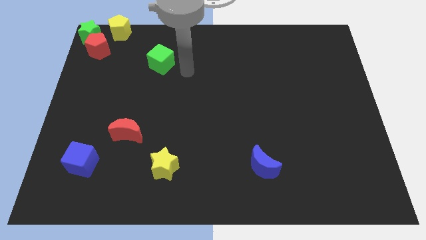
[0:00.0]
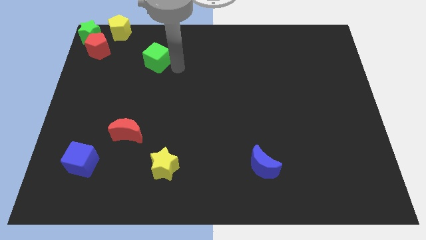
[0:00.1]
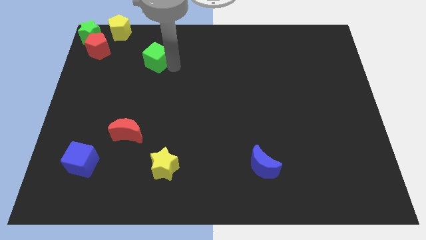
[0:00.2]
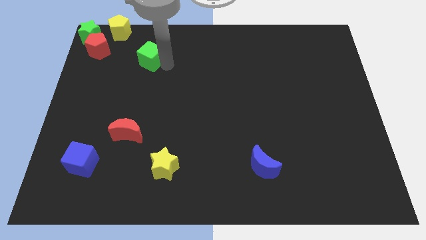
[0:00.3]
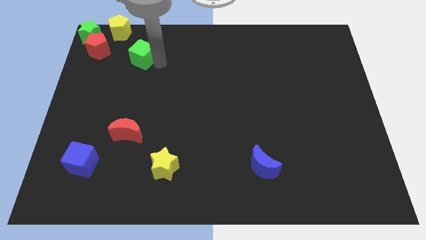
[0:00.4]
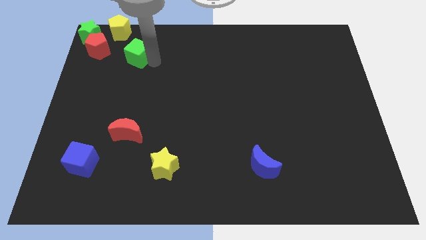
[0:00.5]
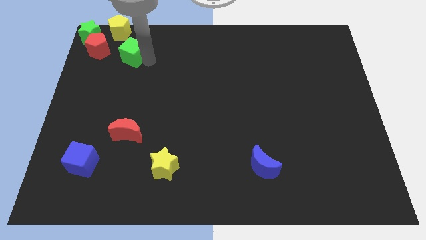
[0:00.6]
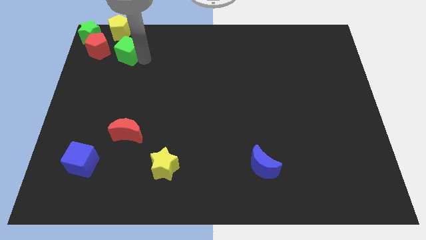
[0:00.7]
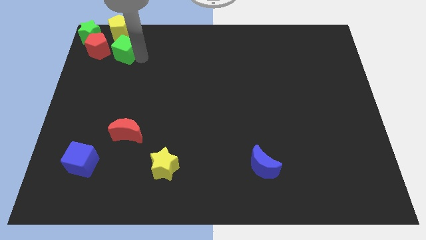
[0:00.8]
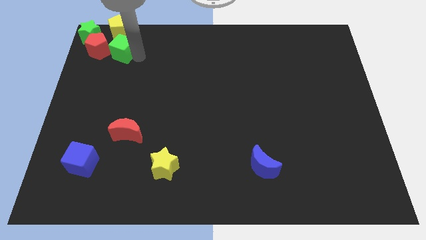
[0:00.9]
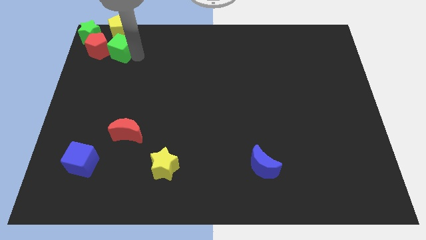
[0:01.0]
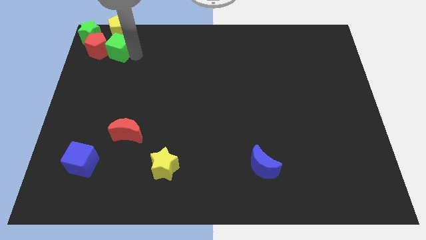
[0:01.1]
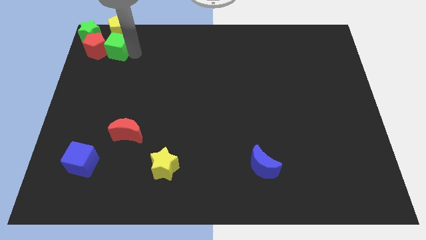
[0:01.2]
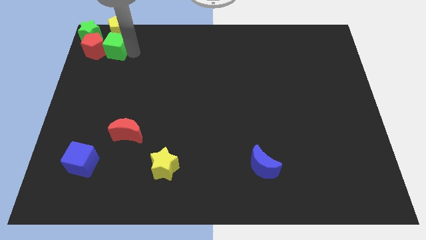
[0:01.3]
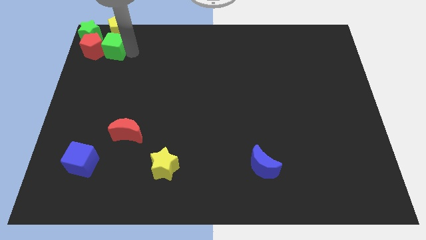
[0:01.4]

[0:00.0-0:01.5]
place the green cube below yellow pentagon

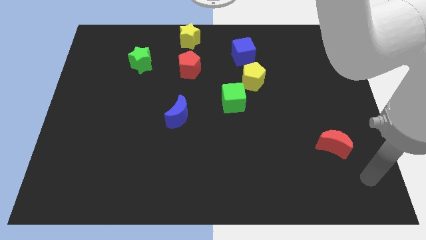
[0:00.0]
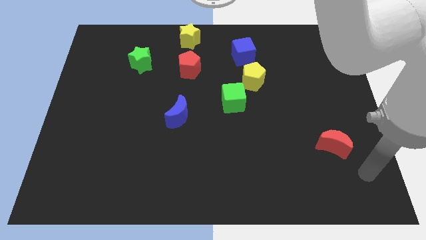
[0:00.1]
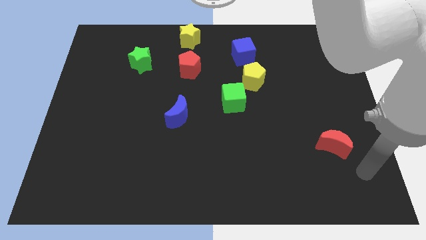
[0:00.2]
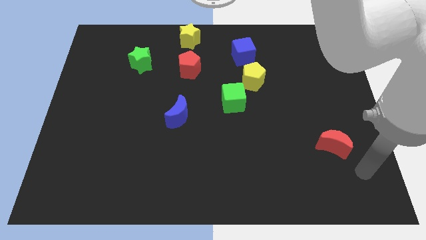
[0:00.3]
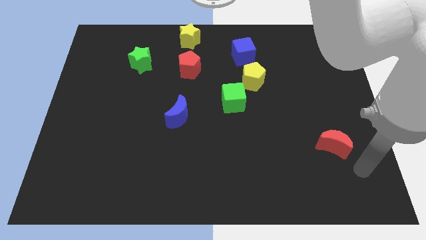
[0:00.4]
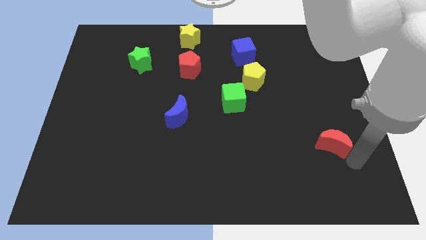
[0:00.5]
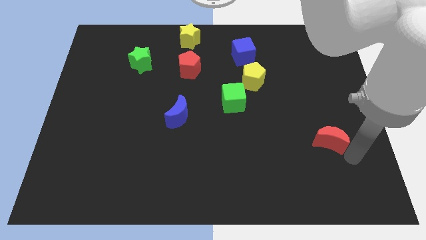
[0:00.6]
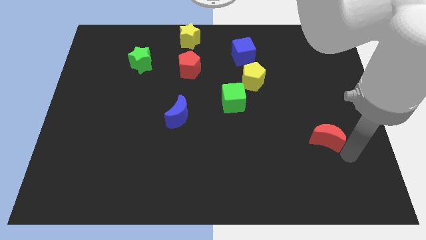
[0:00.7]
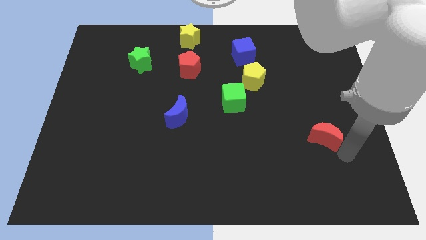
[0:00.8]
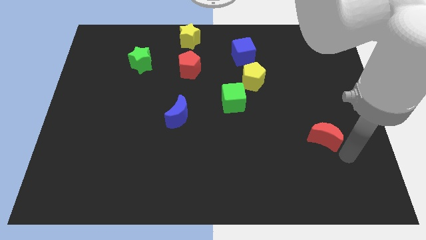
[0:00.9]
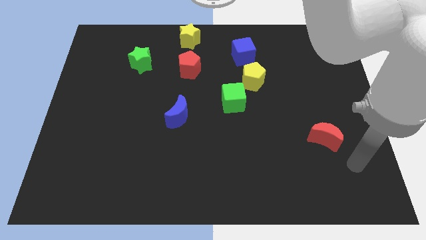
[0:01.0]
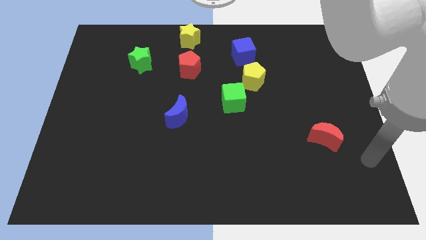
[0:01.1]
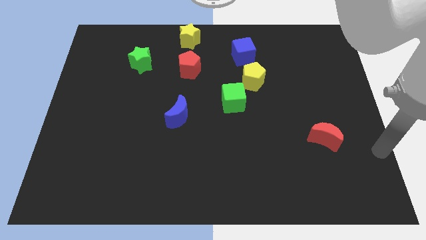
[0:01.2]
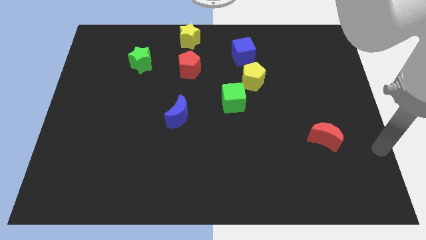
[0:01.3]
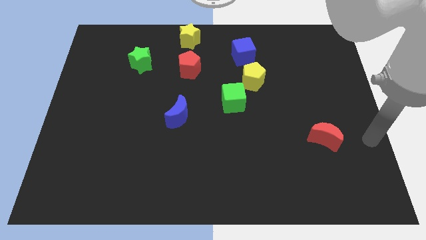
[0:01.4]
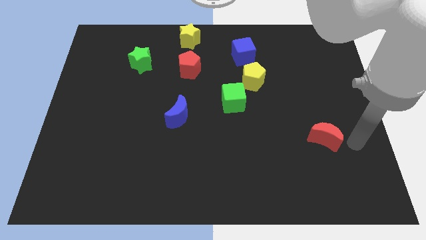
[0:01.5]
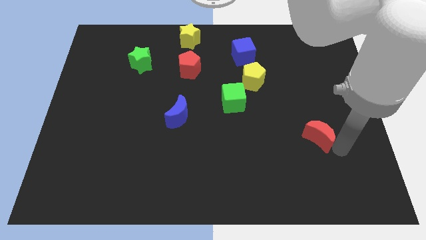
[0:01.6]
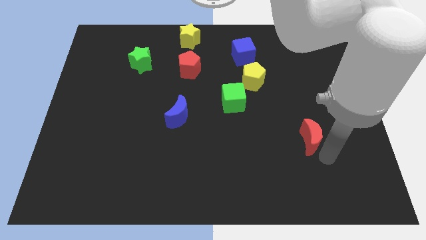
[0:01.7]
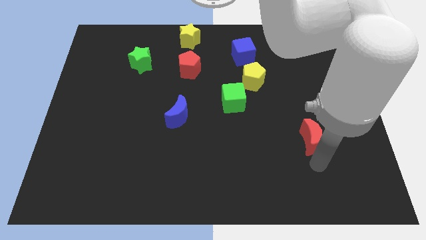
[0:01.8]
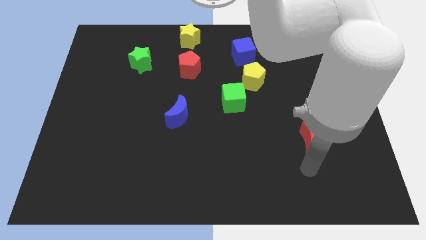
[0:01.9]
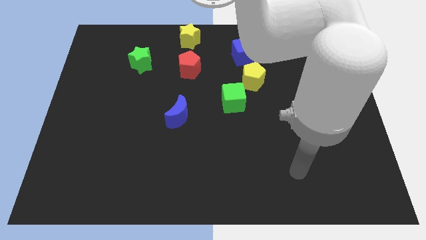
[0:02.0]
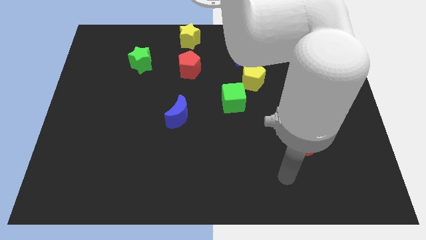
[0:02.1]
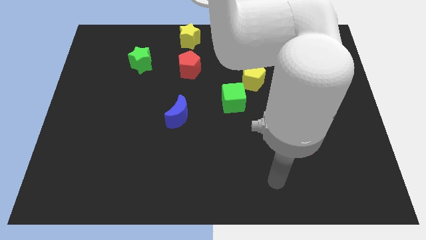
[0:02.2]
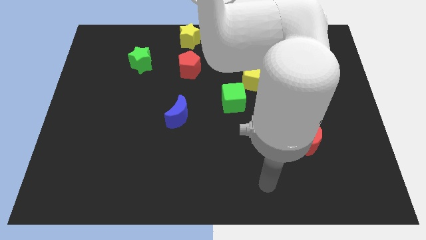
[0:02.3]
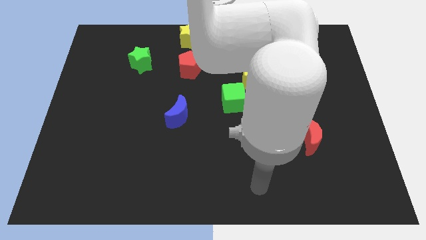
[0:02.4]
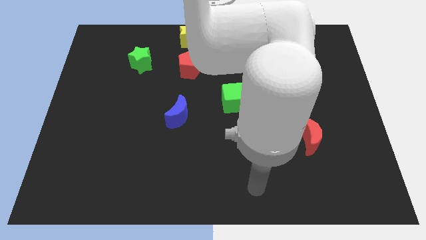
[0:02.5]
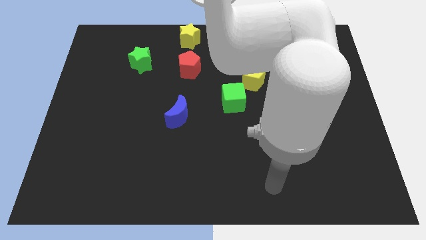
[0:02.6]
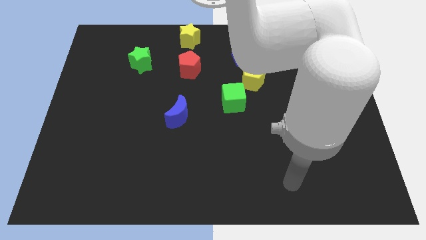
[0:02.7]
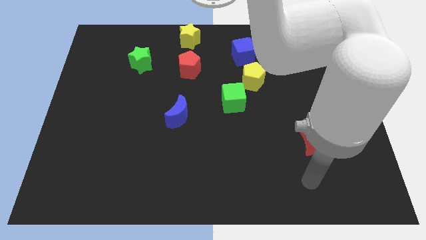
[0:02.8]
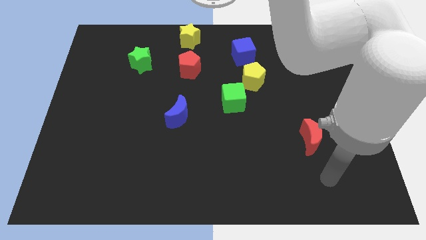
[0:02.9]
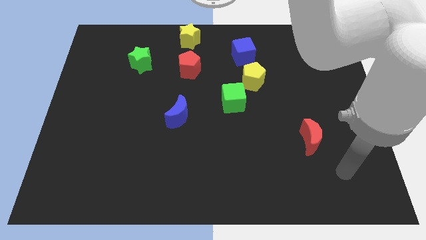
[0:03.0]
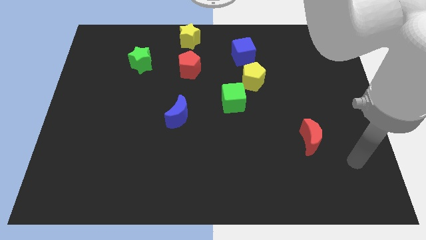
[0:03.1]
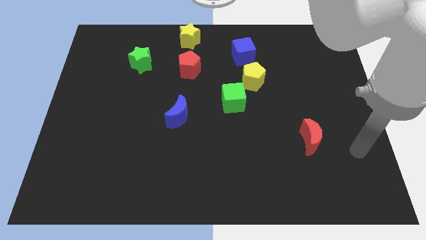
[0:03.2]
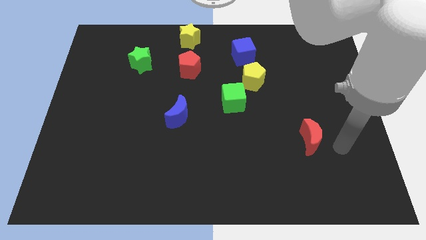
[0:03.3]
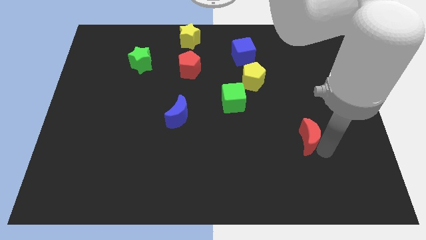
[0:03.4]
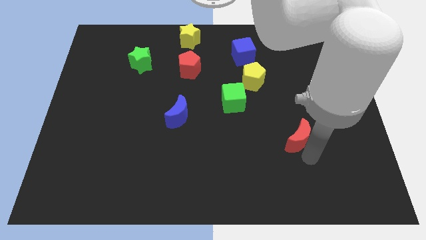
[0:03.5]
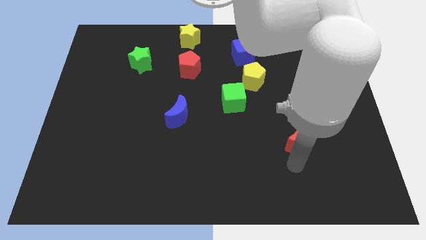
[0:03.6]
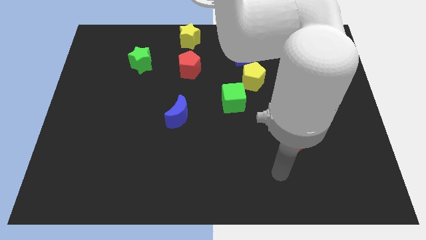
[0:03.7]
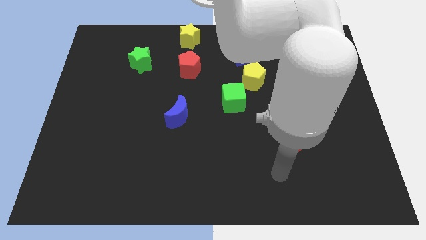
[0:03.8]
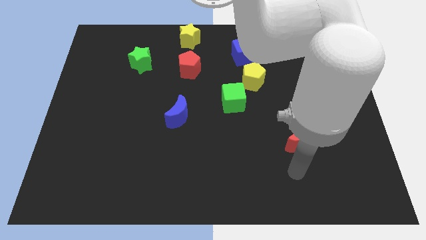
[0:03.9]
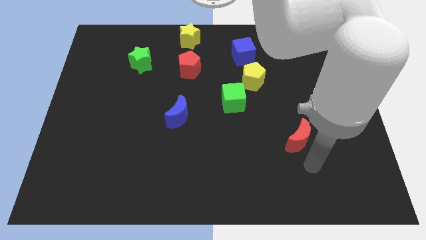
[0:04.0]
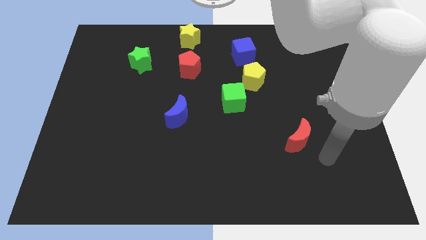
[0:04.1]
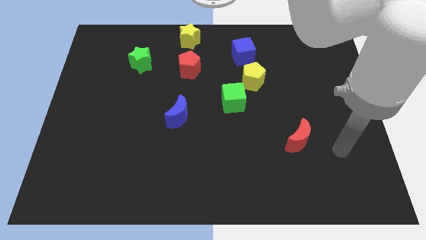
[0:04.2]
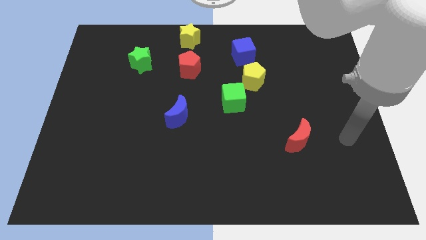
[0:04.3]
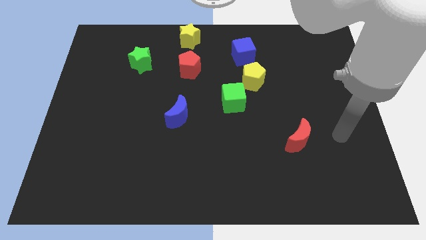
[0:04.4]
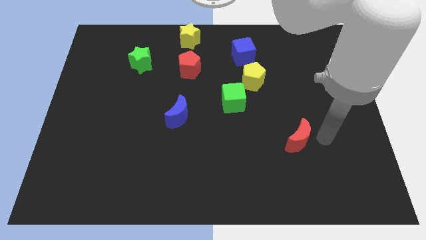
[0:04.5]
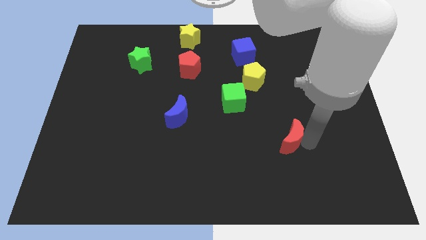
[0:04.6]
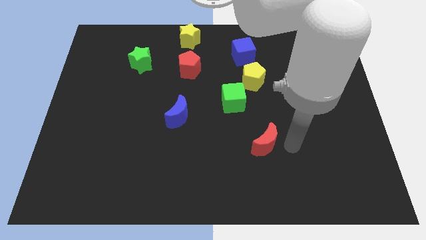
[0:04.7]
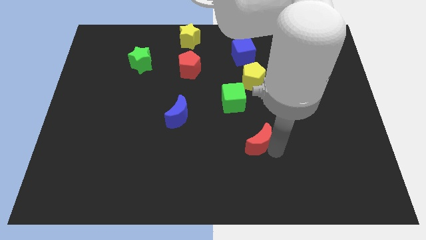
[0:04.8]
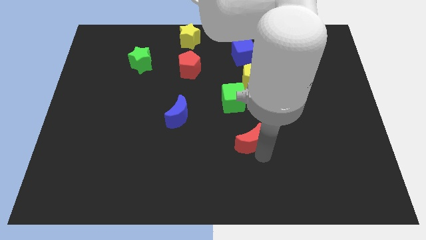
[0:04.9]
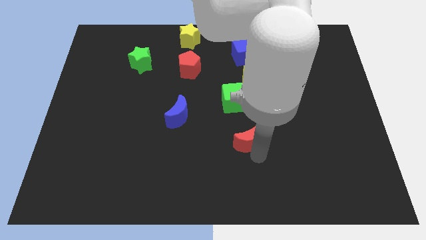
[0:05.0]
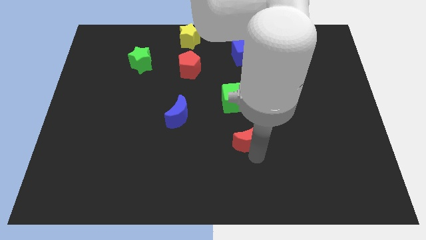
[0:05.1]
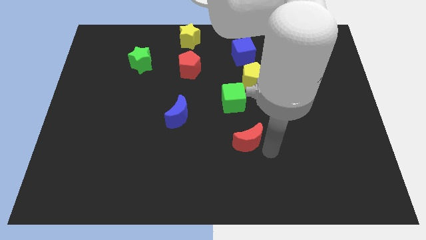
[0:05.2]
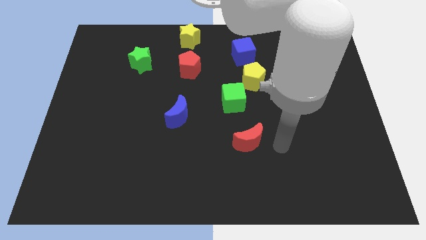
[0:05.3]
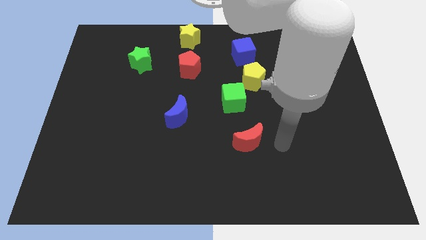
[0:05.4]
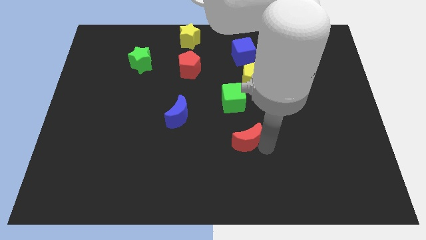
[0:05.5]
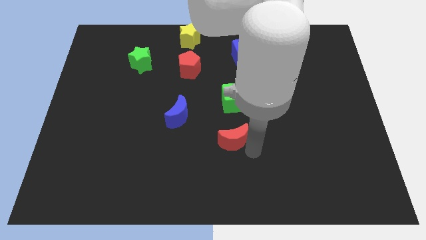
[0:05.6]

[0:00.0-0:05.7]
place the red crescent below the green cube

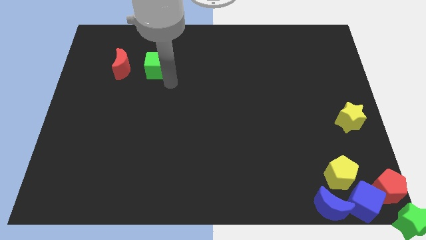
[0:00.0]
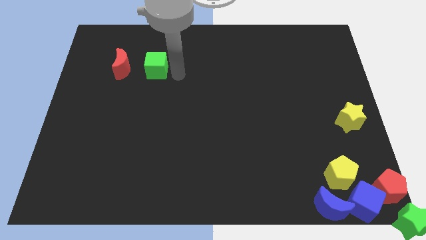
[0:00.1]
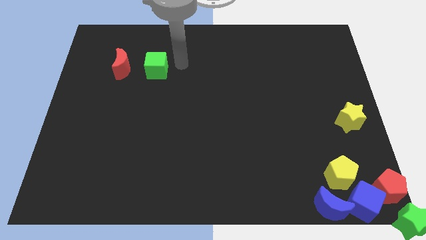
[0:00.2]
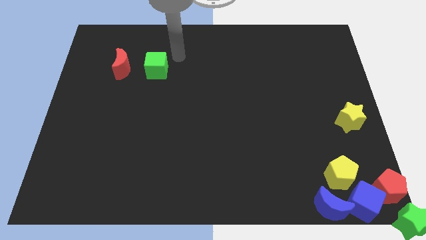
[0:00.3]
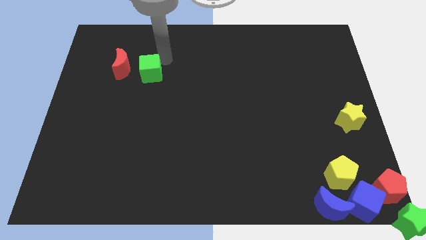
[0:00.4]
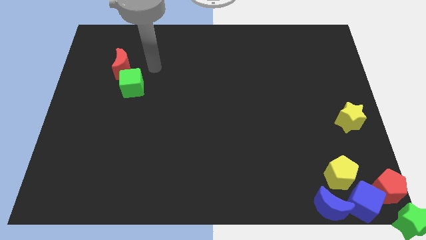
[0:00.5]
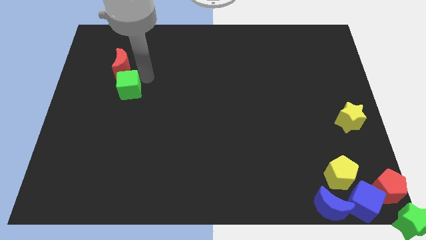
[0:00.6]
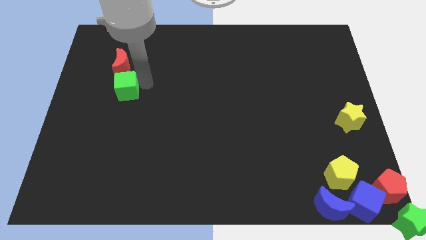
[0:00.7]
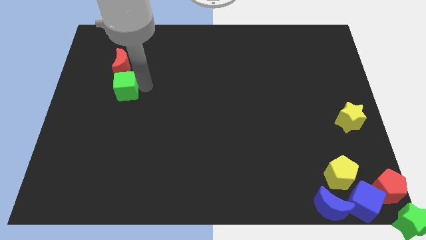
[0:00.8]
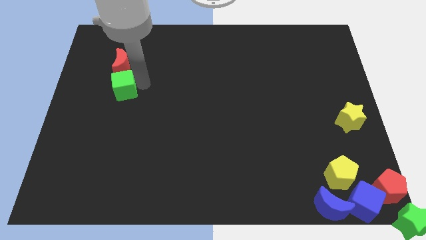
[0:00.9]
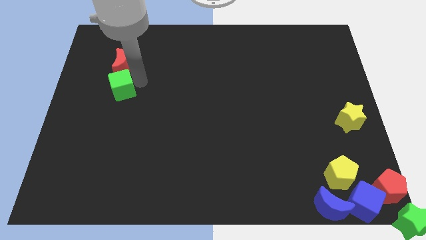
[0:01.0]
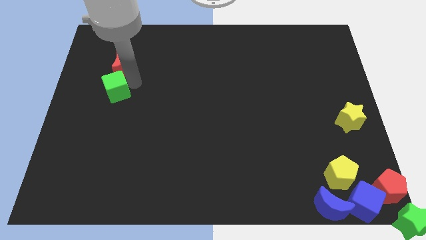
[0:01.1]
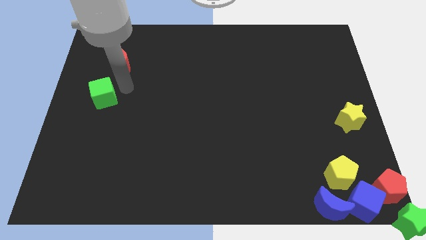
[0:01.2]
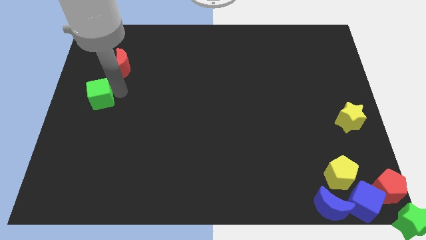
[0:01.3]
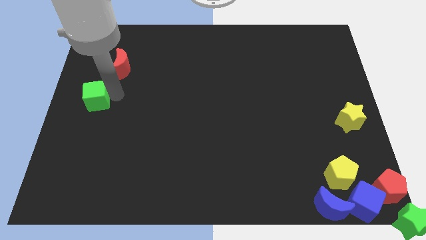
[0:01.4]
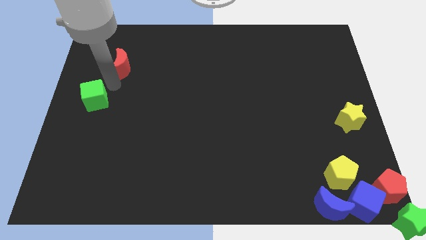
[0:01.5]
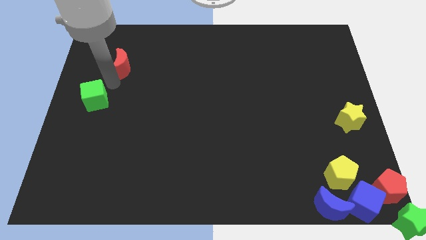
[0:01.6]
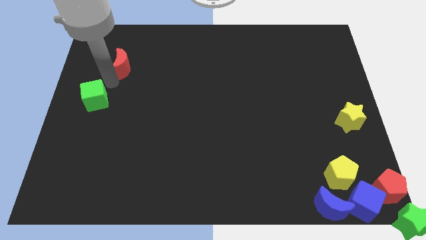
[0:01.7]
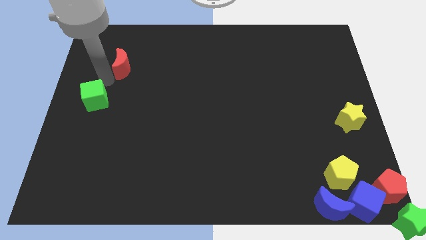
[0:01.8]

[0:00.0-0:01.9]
move the green cube towards the center left

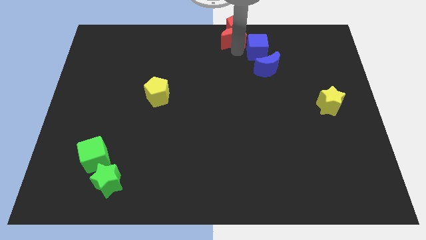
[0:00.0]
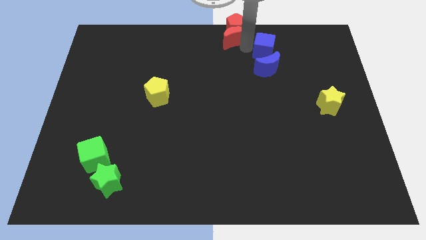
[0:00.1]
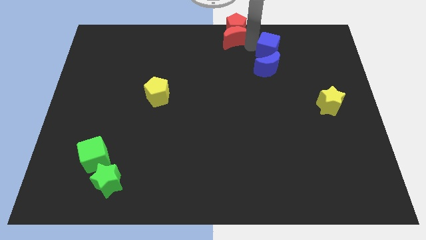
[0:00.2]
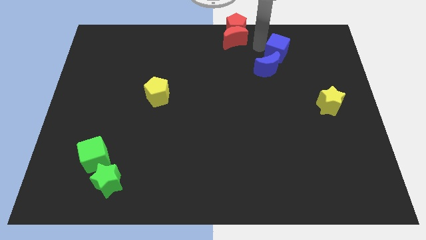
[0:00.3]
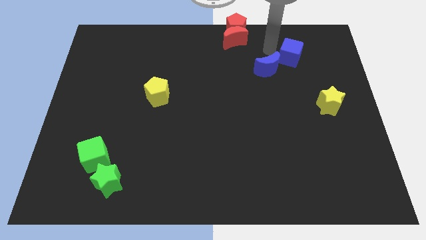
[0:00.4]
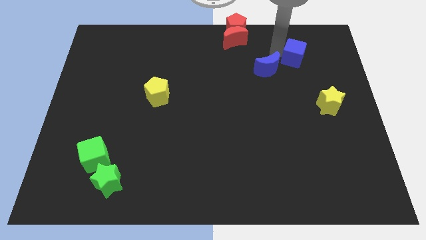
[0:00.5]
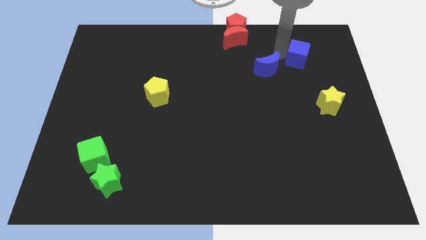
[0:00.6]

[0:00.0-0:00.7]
separate the blue cube from red moon
